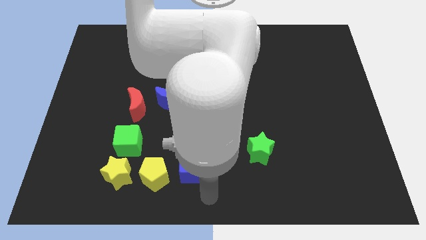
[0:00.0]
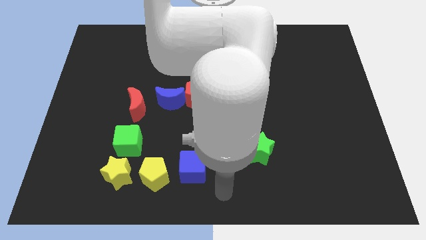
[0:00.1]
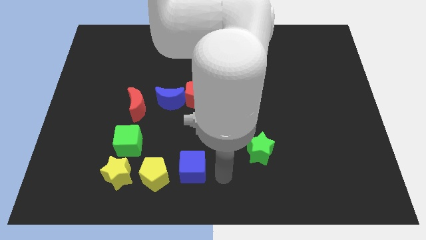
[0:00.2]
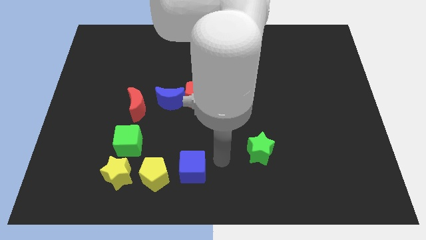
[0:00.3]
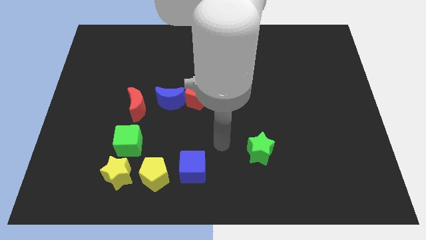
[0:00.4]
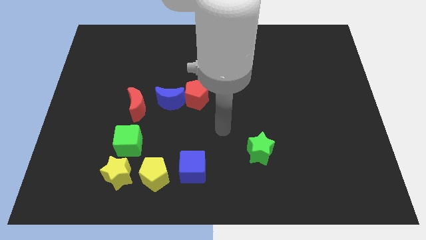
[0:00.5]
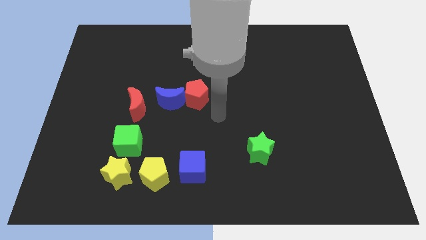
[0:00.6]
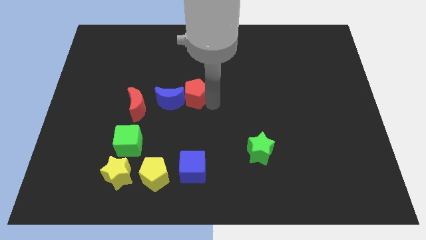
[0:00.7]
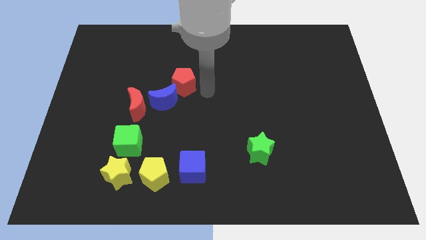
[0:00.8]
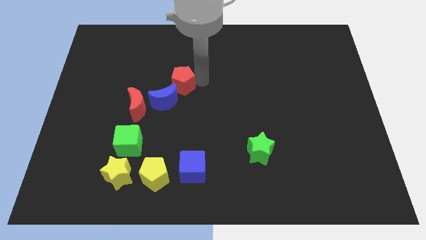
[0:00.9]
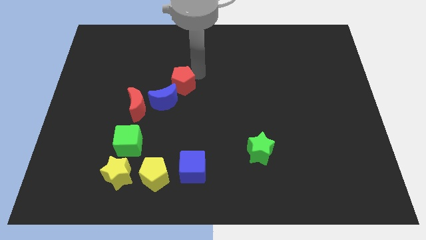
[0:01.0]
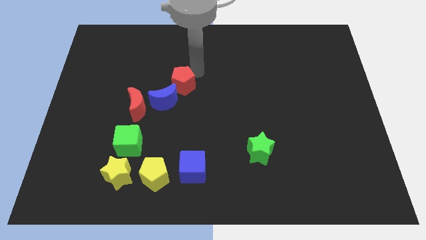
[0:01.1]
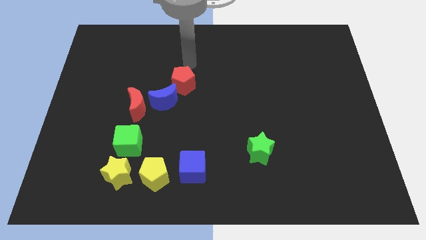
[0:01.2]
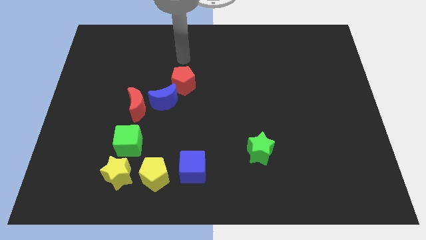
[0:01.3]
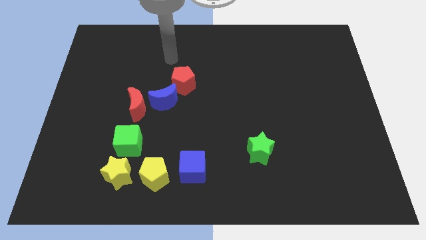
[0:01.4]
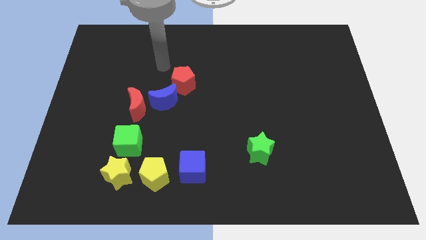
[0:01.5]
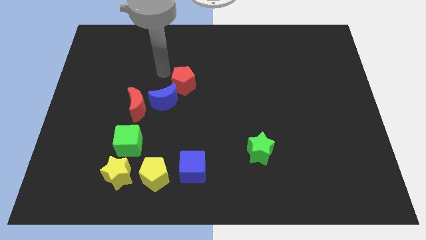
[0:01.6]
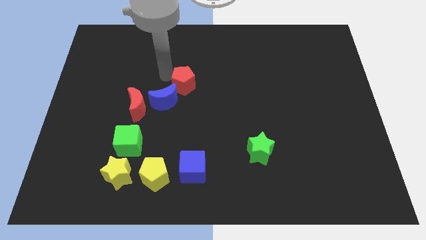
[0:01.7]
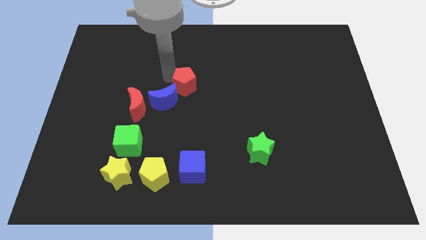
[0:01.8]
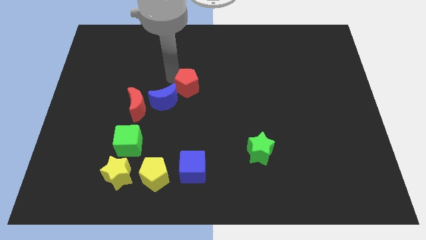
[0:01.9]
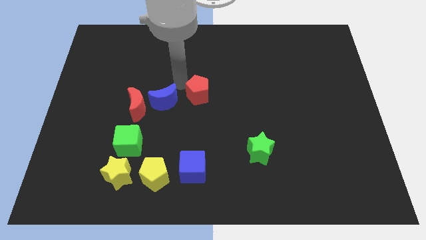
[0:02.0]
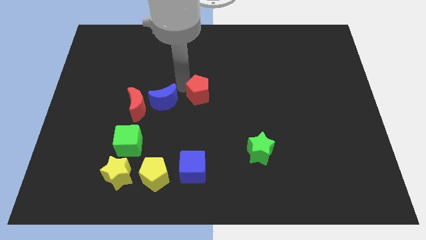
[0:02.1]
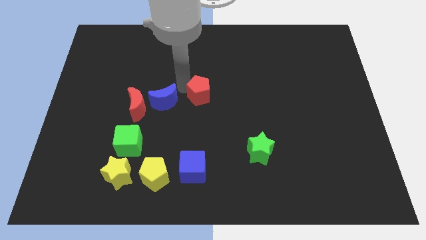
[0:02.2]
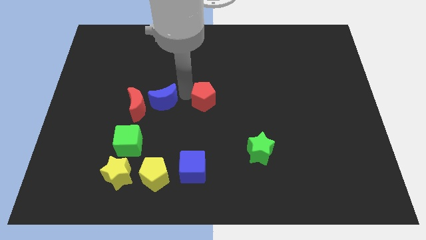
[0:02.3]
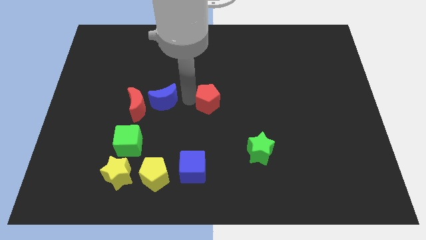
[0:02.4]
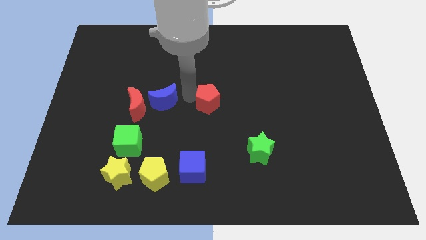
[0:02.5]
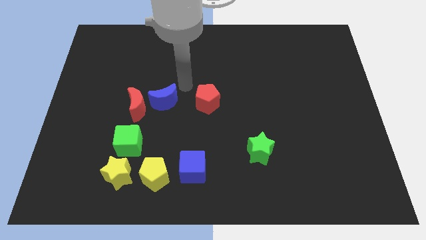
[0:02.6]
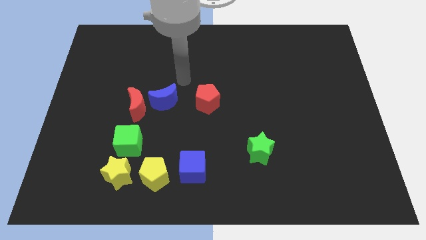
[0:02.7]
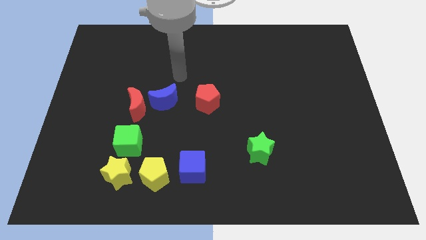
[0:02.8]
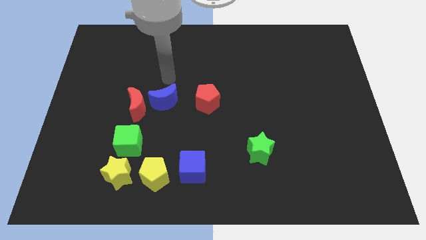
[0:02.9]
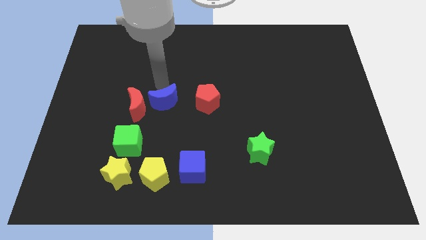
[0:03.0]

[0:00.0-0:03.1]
push the red pentagon to the right side of the blue crescent

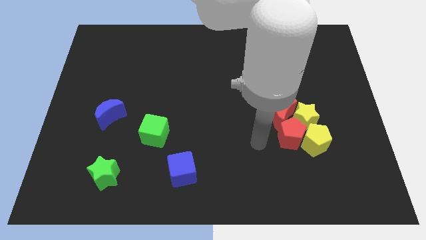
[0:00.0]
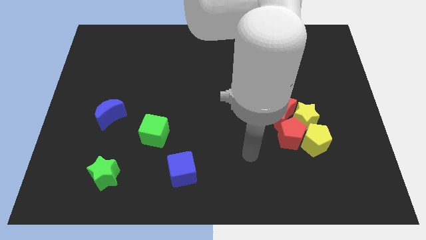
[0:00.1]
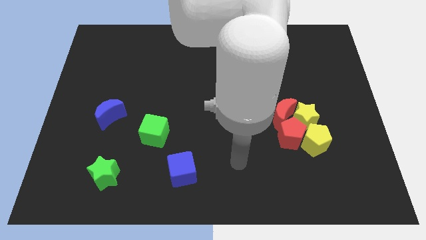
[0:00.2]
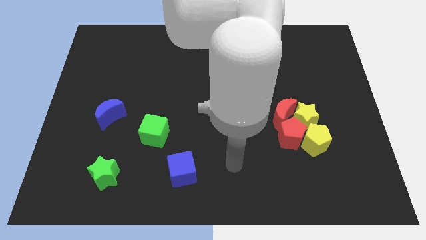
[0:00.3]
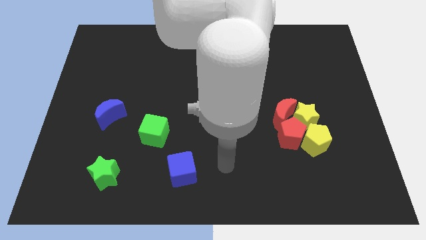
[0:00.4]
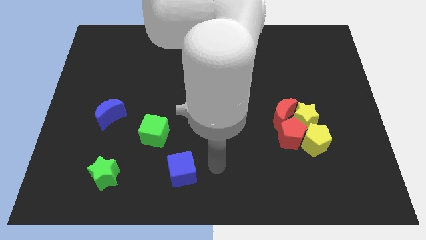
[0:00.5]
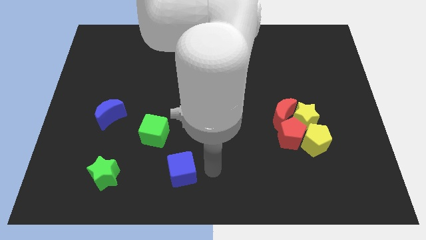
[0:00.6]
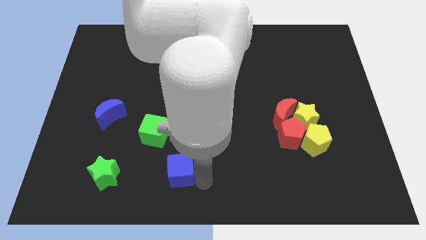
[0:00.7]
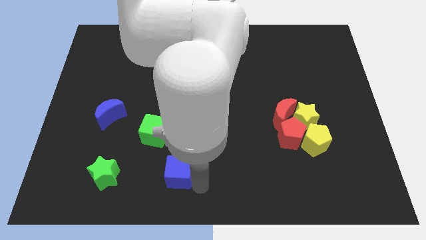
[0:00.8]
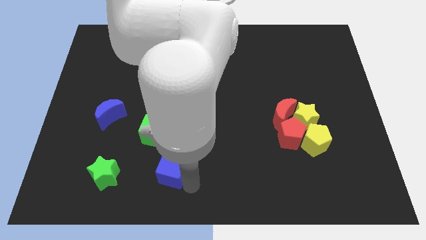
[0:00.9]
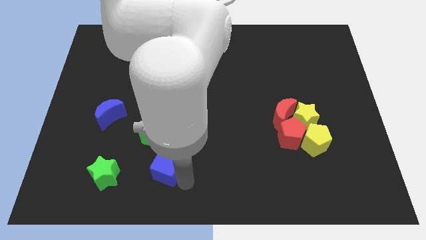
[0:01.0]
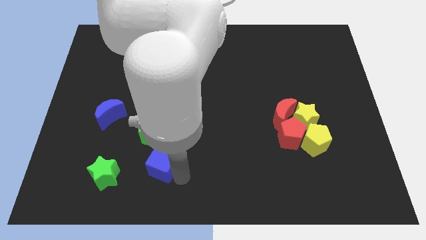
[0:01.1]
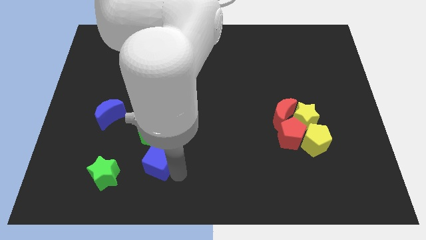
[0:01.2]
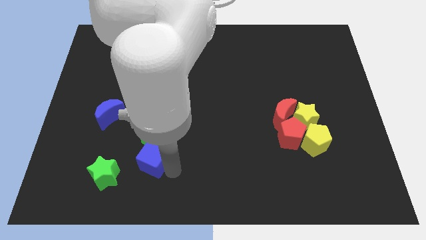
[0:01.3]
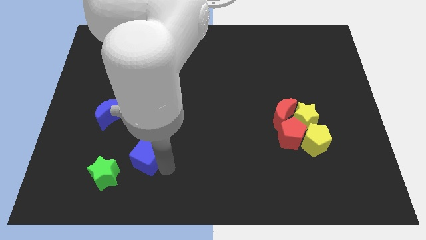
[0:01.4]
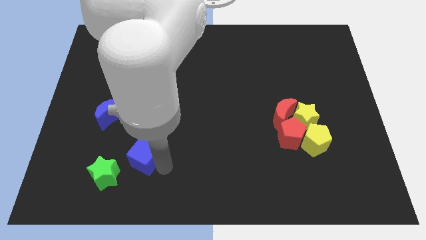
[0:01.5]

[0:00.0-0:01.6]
move the blue cube between green blocks

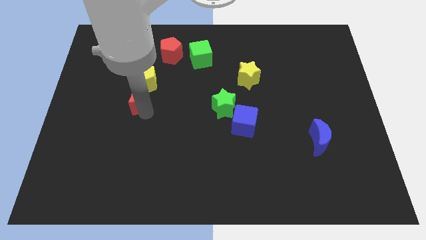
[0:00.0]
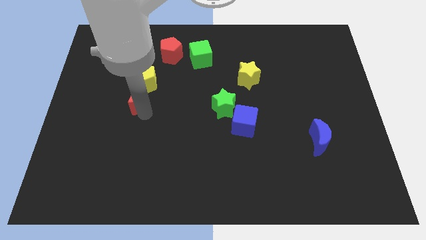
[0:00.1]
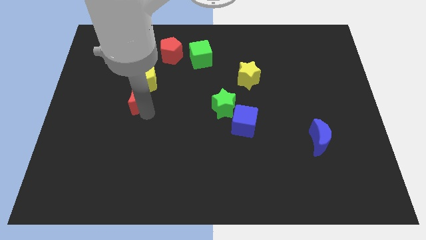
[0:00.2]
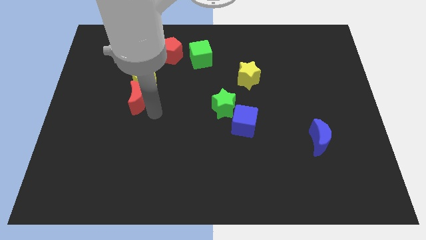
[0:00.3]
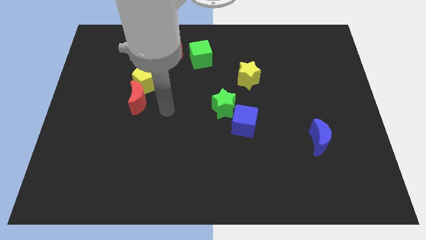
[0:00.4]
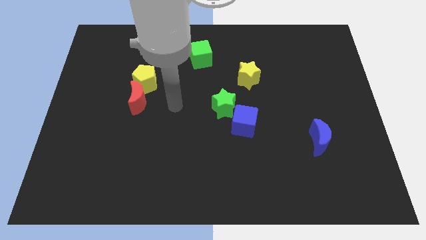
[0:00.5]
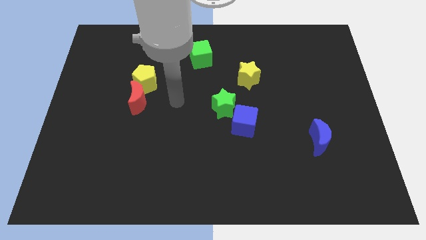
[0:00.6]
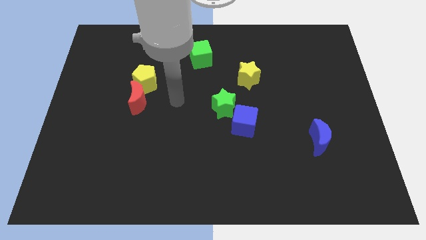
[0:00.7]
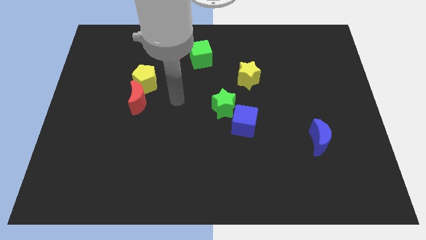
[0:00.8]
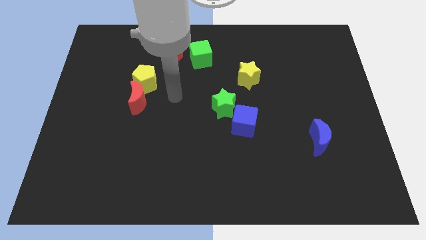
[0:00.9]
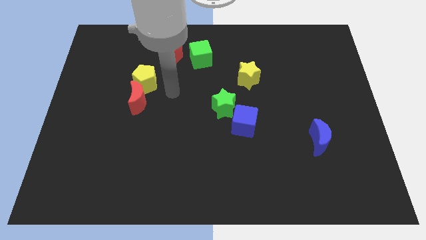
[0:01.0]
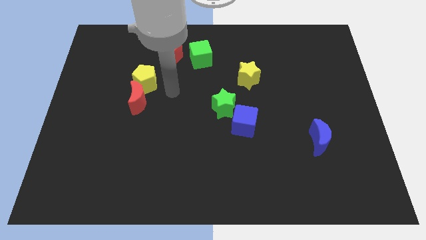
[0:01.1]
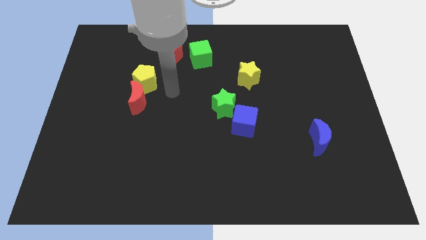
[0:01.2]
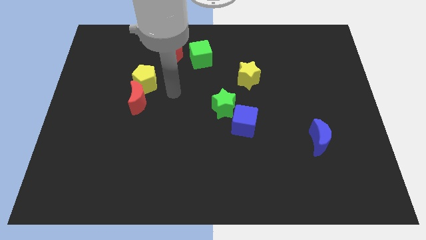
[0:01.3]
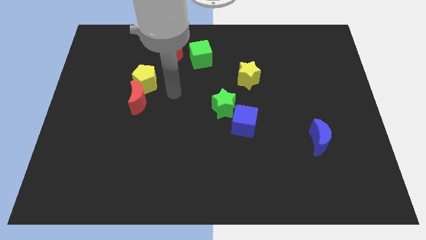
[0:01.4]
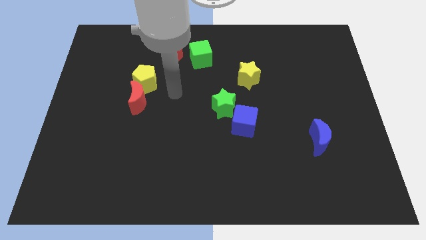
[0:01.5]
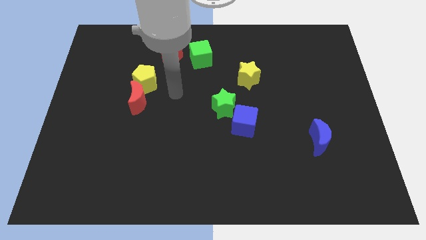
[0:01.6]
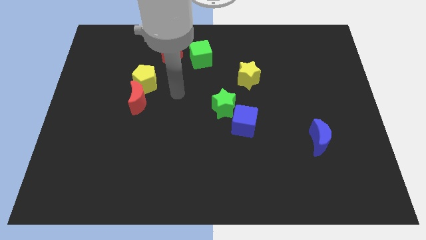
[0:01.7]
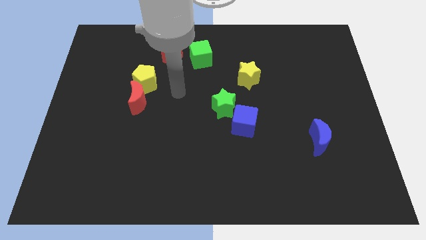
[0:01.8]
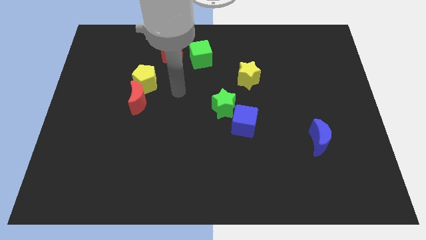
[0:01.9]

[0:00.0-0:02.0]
place your hand to the right of the yellow pentagon

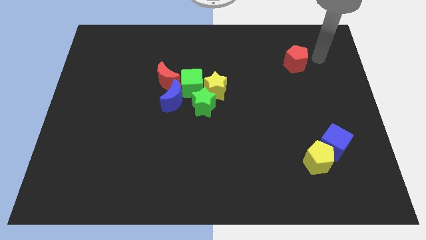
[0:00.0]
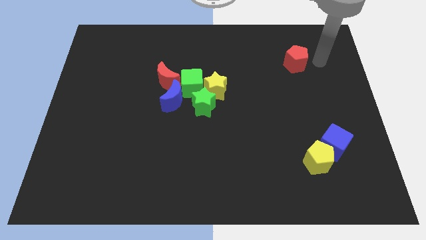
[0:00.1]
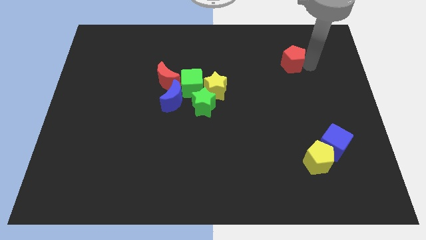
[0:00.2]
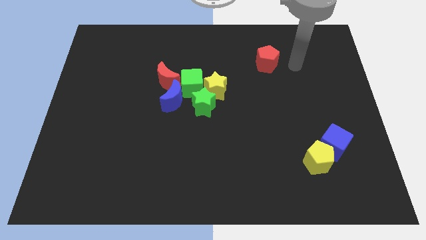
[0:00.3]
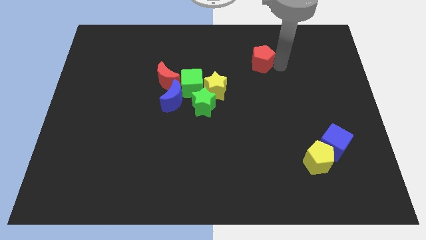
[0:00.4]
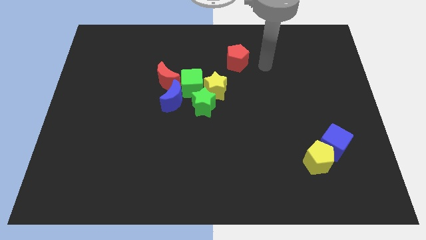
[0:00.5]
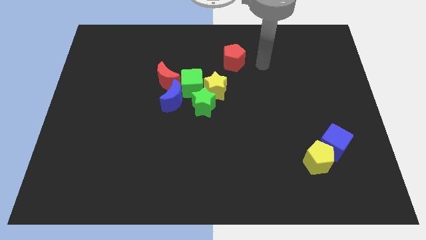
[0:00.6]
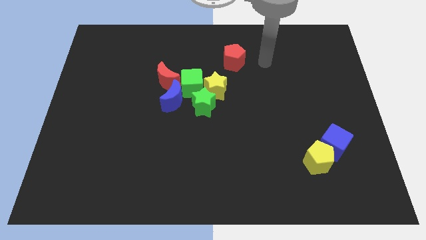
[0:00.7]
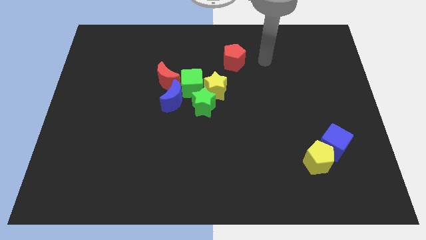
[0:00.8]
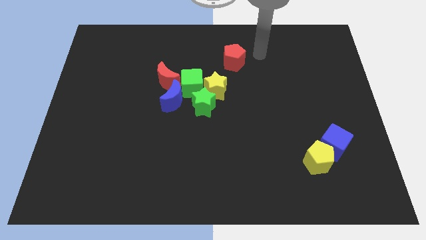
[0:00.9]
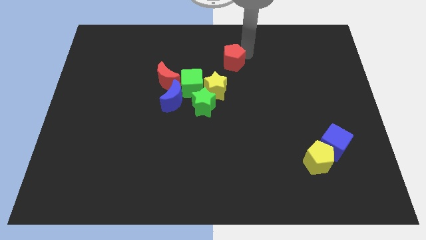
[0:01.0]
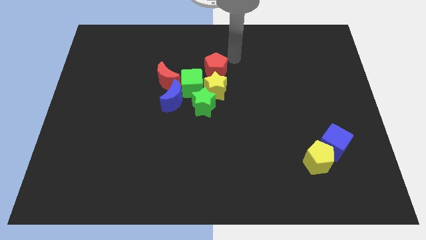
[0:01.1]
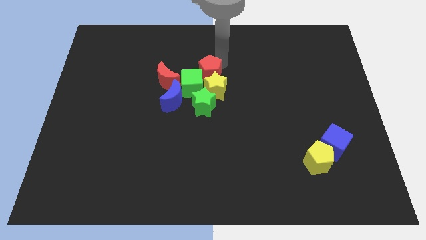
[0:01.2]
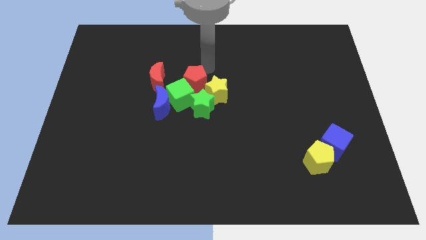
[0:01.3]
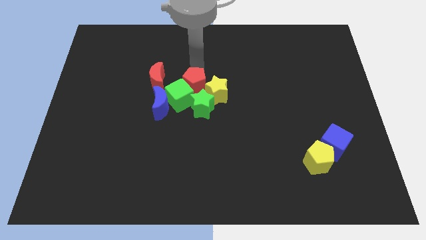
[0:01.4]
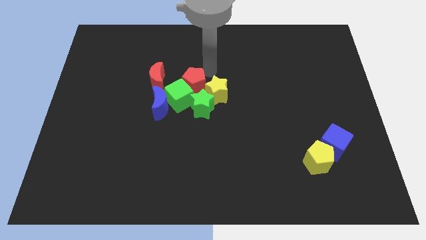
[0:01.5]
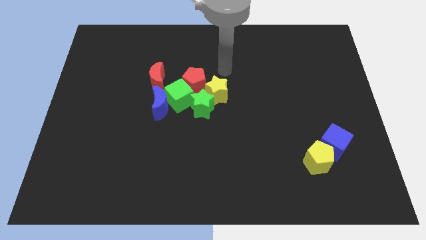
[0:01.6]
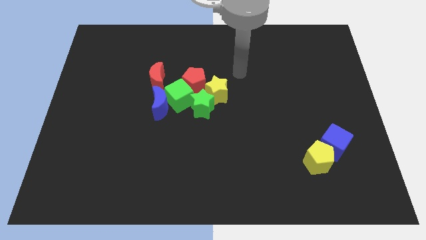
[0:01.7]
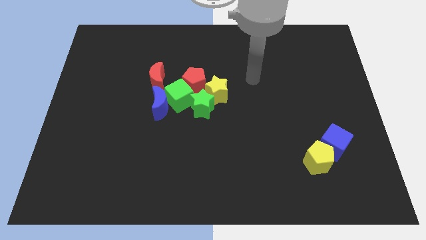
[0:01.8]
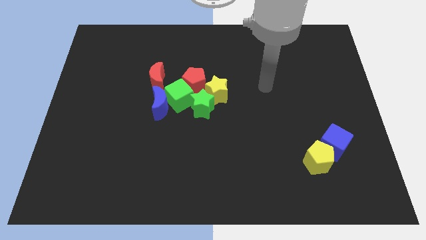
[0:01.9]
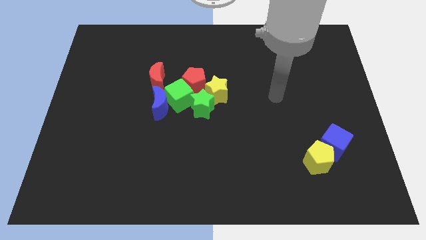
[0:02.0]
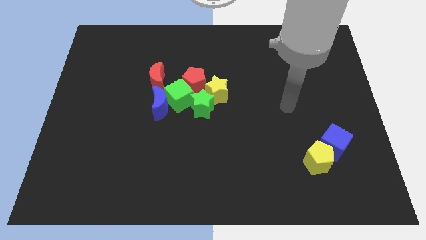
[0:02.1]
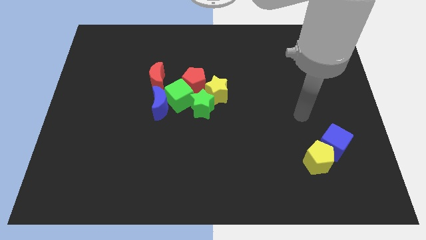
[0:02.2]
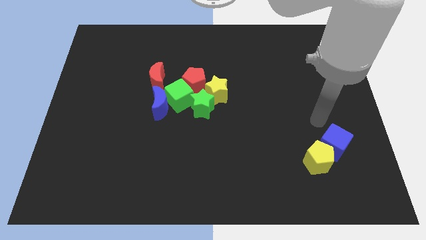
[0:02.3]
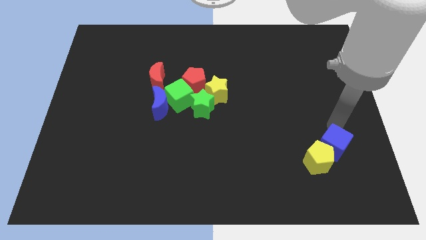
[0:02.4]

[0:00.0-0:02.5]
move the red pentagon into the group of blocks
